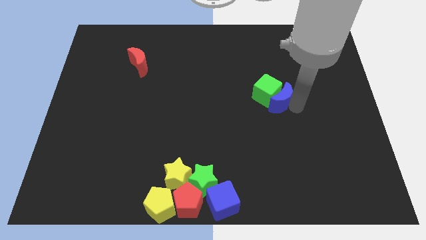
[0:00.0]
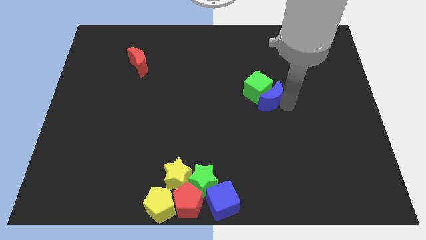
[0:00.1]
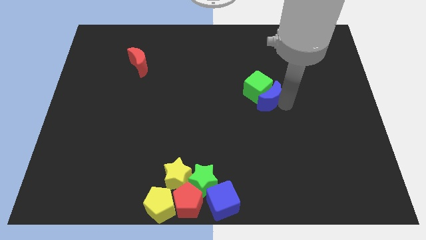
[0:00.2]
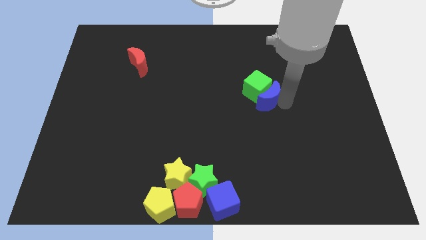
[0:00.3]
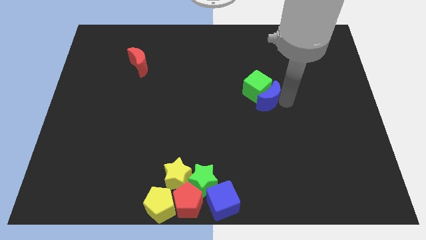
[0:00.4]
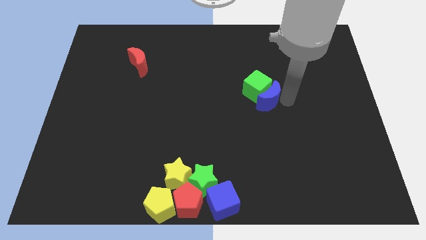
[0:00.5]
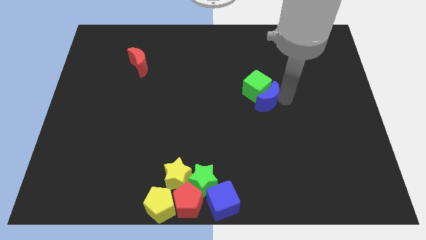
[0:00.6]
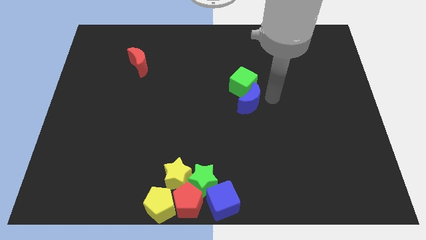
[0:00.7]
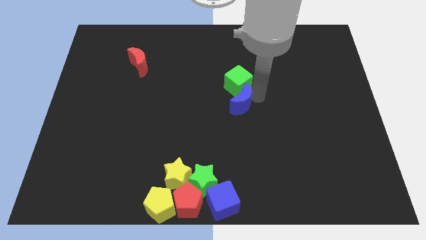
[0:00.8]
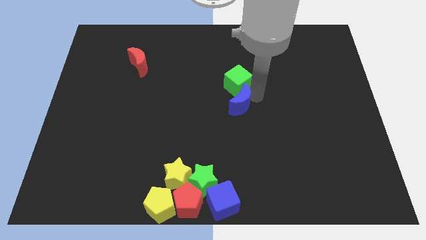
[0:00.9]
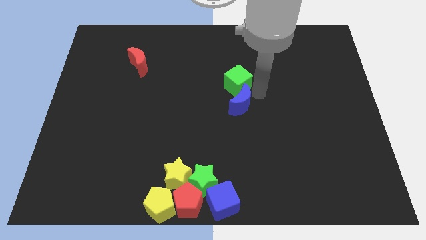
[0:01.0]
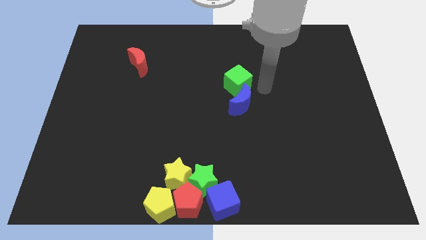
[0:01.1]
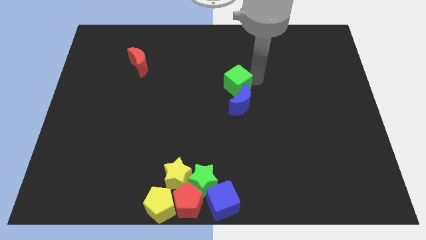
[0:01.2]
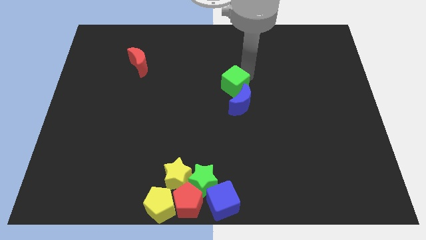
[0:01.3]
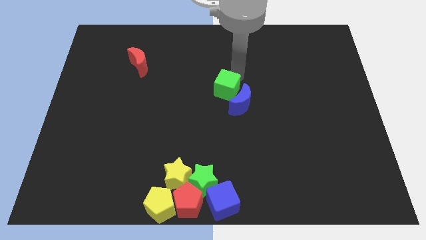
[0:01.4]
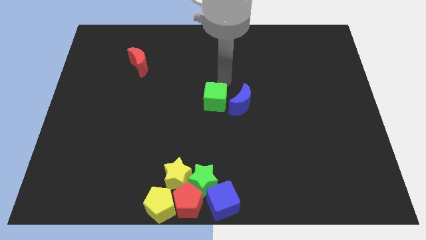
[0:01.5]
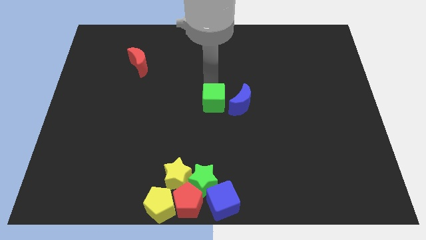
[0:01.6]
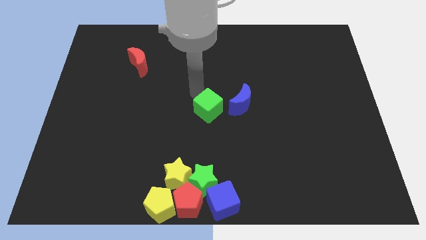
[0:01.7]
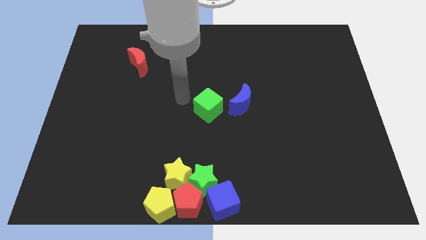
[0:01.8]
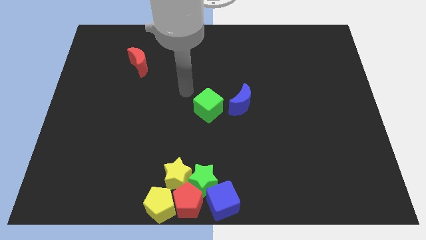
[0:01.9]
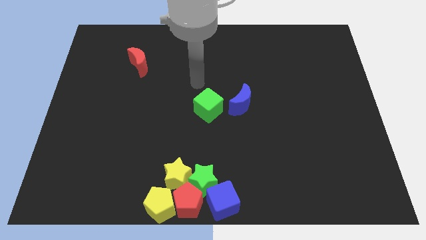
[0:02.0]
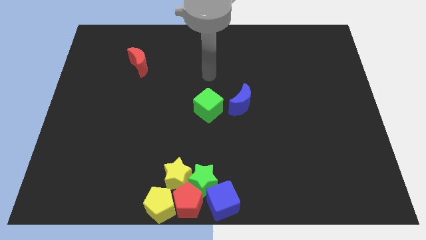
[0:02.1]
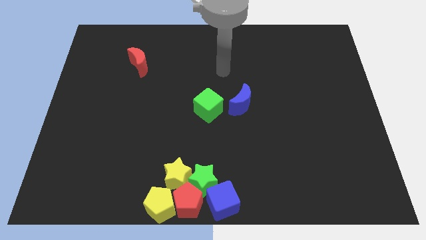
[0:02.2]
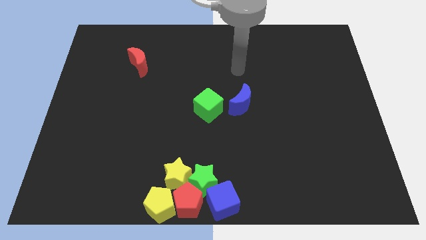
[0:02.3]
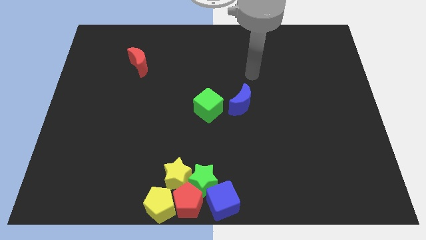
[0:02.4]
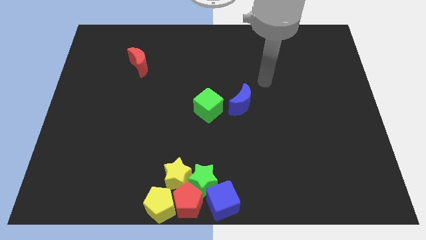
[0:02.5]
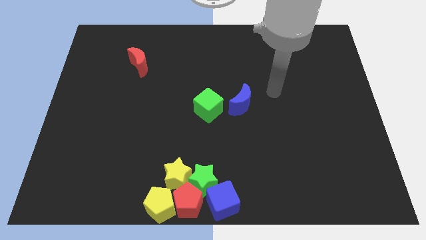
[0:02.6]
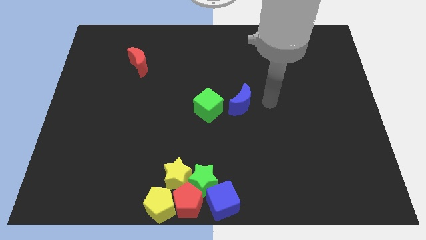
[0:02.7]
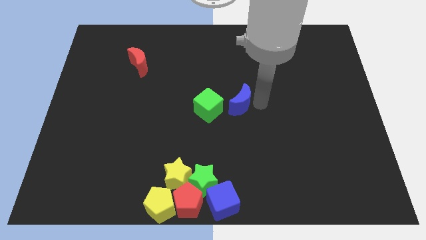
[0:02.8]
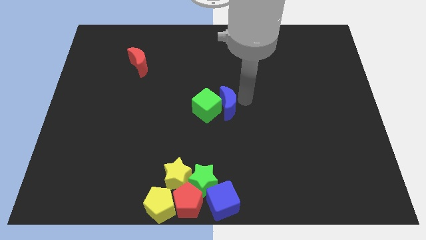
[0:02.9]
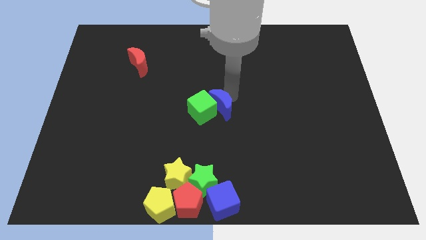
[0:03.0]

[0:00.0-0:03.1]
move the green cube and blue moon middle of the board

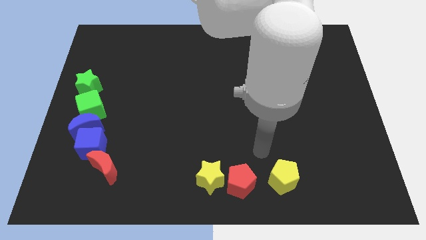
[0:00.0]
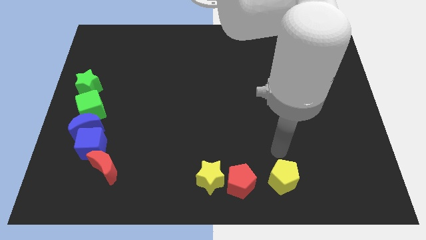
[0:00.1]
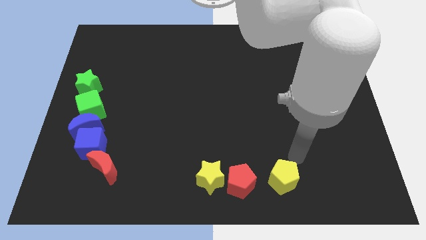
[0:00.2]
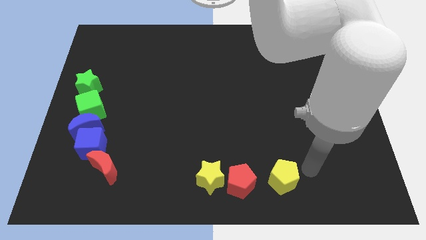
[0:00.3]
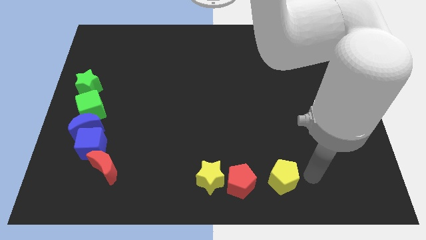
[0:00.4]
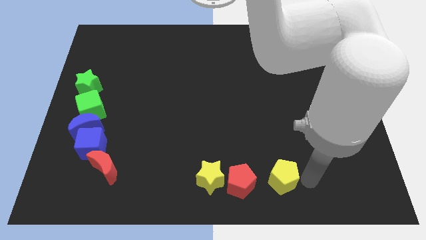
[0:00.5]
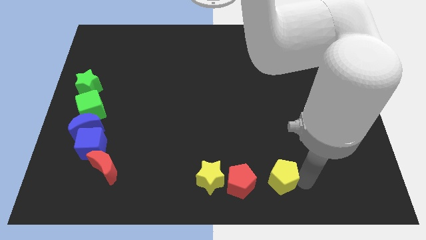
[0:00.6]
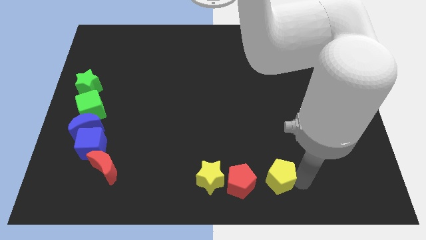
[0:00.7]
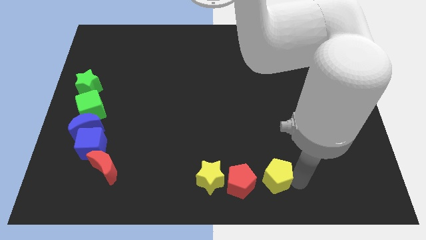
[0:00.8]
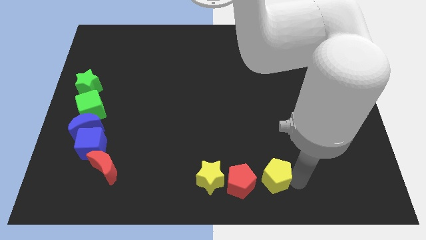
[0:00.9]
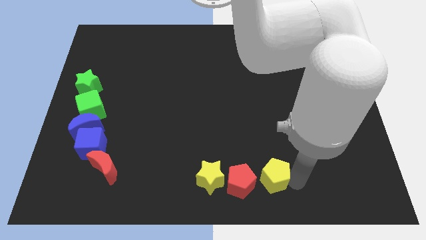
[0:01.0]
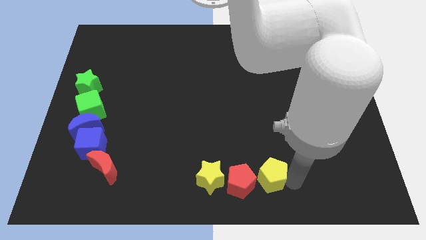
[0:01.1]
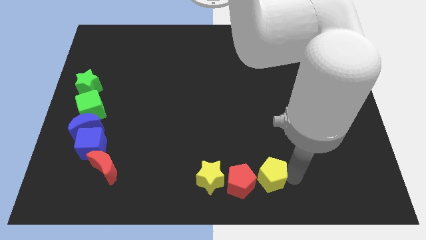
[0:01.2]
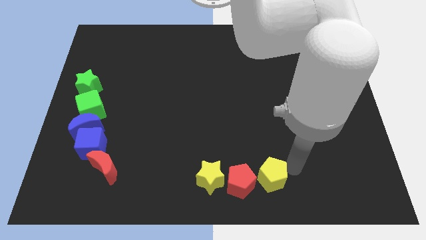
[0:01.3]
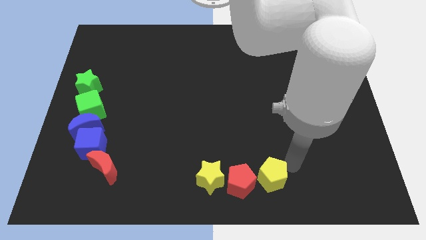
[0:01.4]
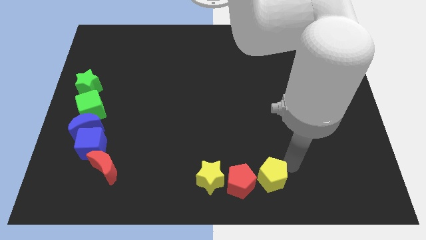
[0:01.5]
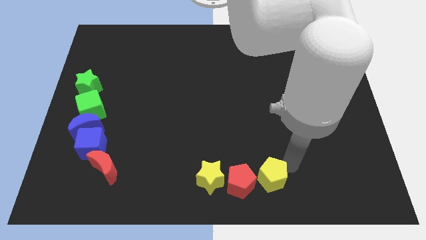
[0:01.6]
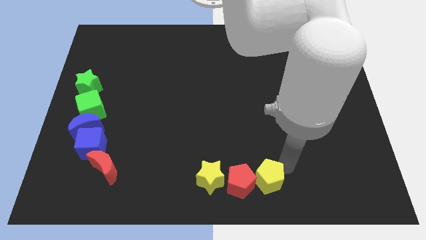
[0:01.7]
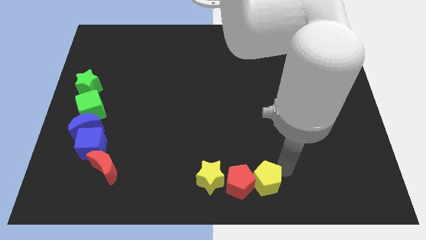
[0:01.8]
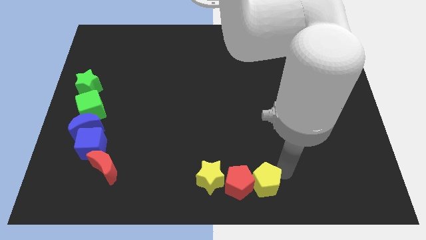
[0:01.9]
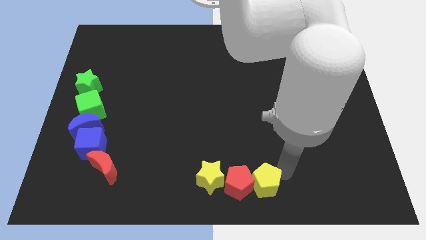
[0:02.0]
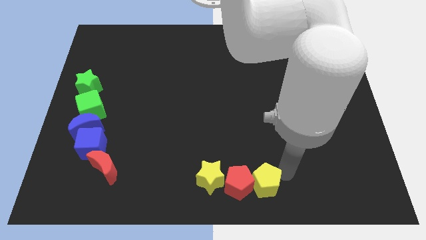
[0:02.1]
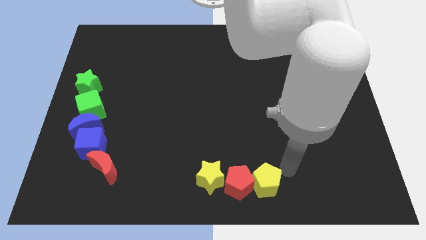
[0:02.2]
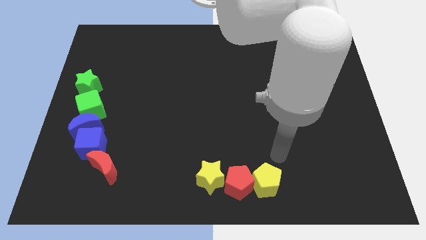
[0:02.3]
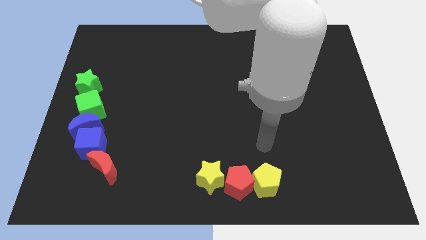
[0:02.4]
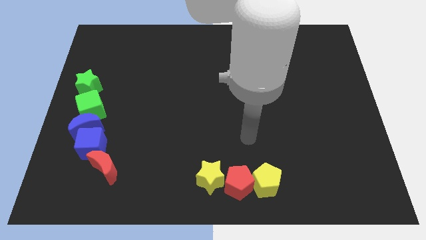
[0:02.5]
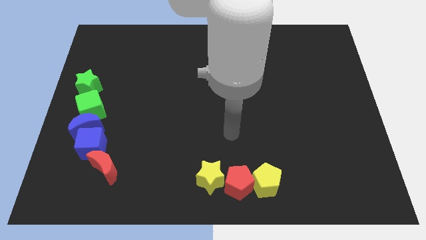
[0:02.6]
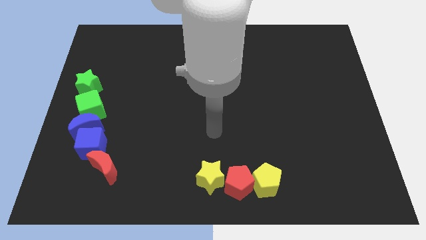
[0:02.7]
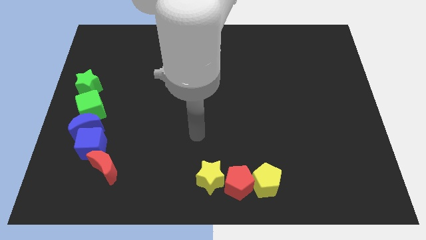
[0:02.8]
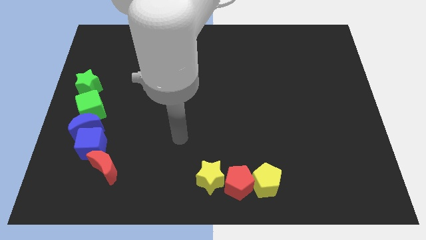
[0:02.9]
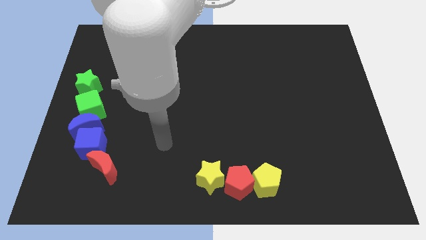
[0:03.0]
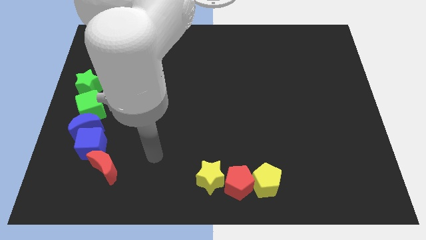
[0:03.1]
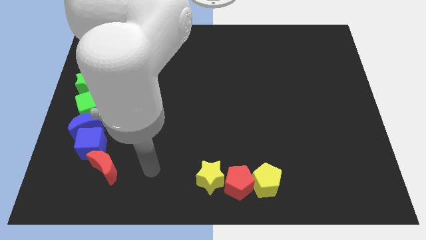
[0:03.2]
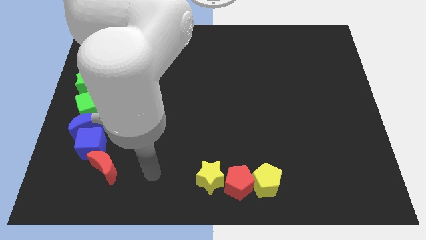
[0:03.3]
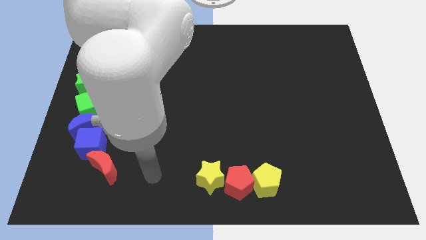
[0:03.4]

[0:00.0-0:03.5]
move the three blocks close to each other at the bottom

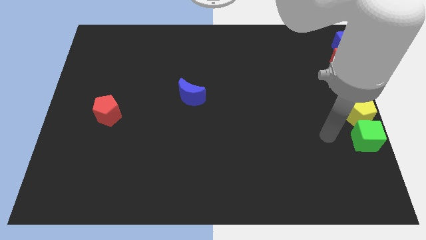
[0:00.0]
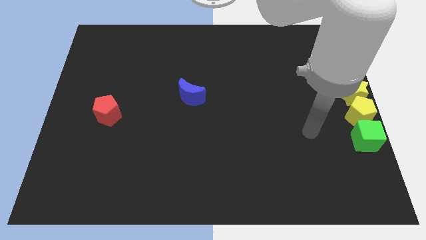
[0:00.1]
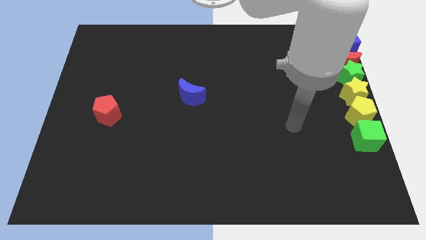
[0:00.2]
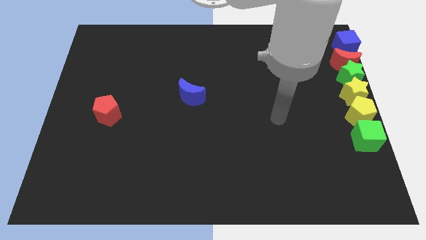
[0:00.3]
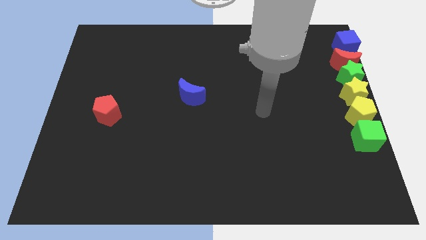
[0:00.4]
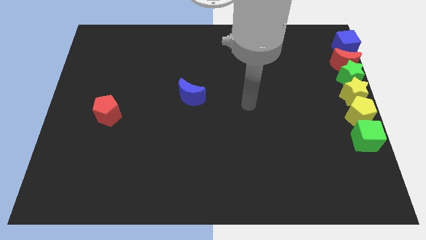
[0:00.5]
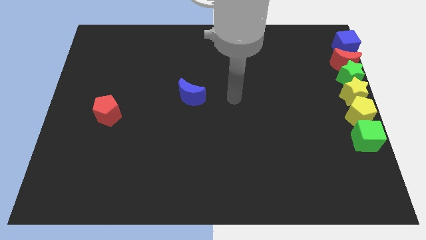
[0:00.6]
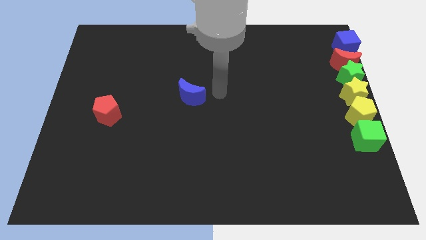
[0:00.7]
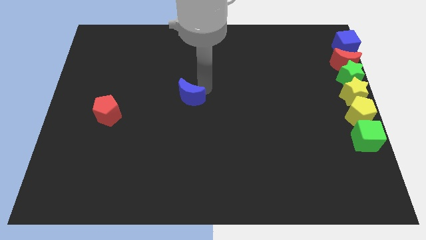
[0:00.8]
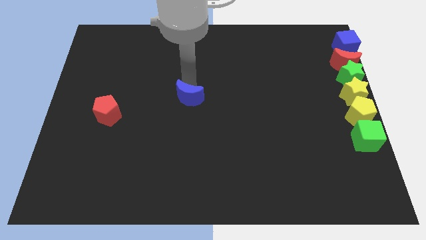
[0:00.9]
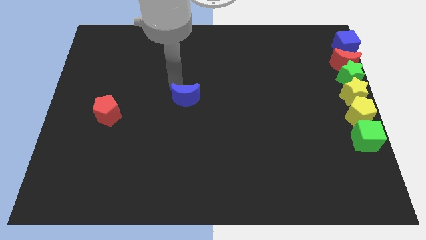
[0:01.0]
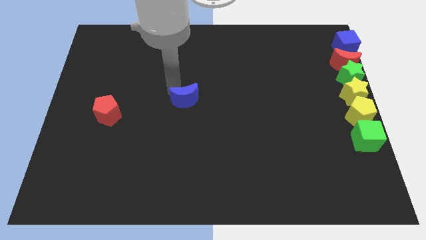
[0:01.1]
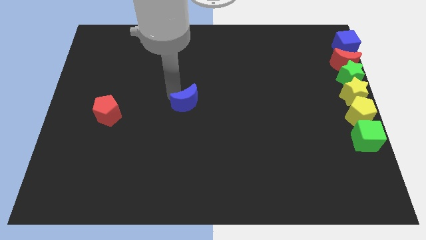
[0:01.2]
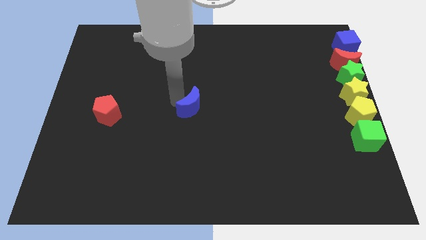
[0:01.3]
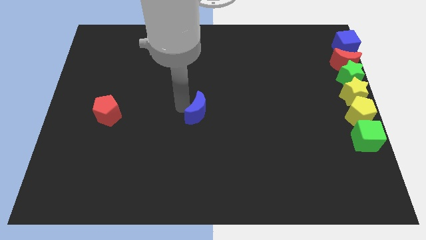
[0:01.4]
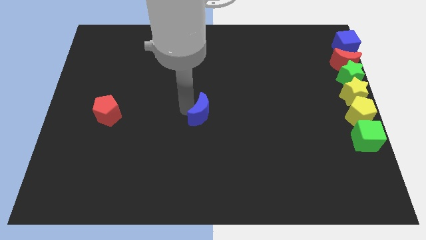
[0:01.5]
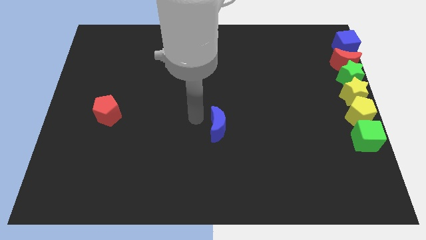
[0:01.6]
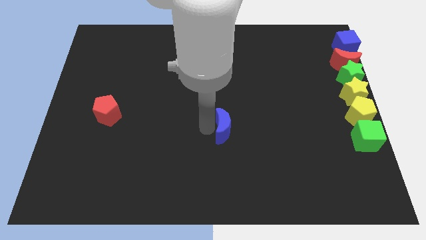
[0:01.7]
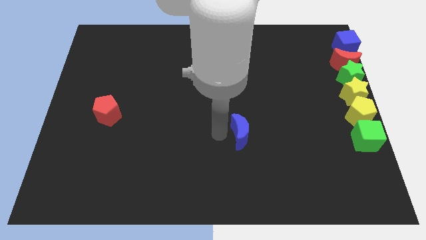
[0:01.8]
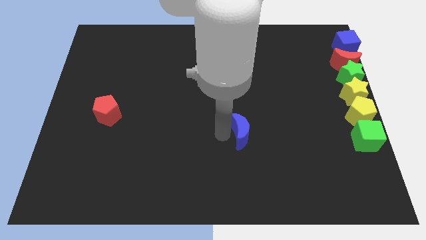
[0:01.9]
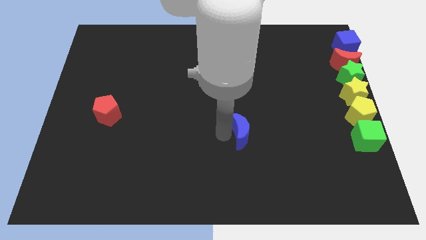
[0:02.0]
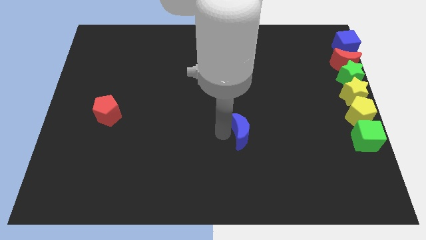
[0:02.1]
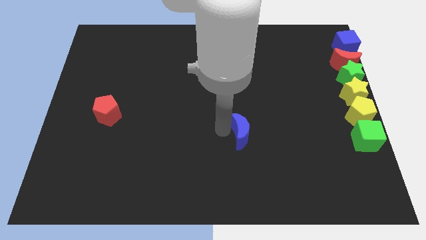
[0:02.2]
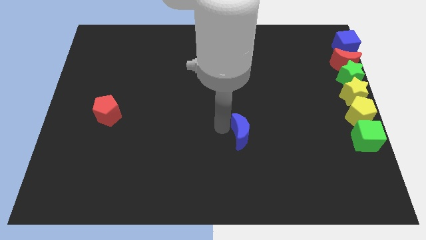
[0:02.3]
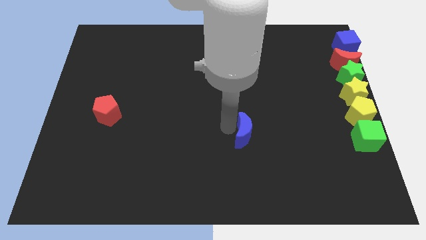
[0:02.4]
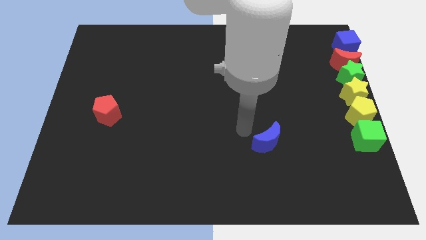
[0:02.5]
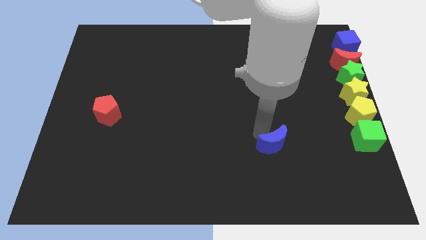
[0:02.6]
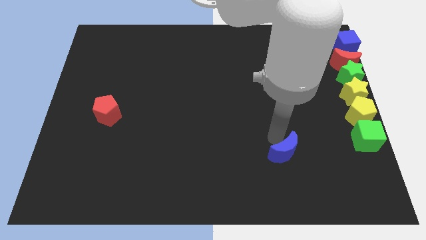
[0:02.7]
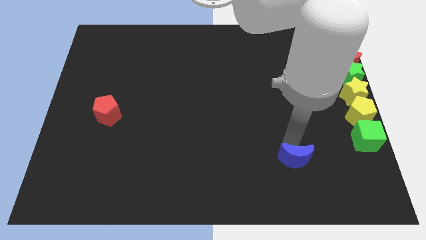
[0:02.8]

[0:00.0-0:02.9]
push blue crescent diagonally below
